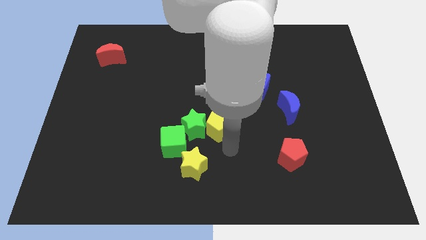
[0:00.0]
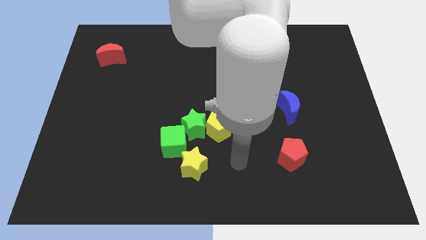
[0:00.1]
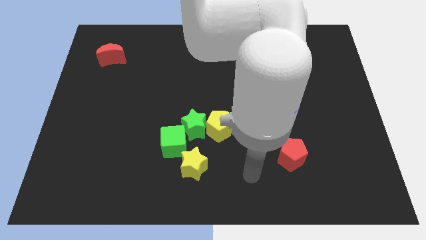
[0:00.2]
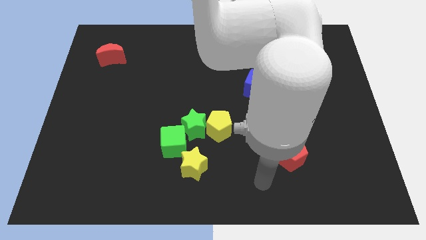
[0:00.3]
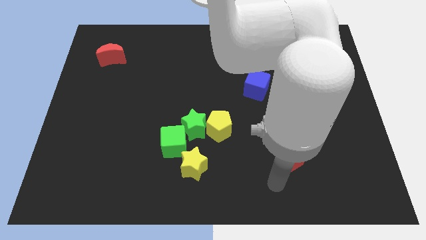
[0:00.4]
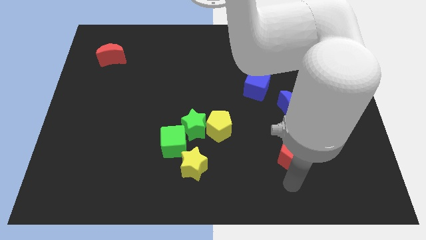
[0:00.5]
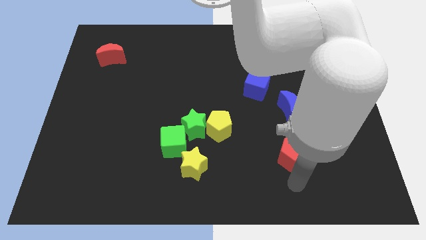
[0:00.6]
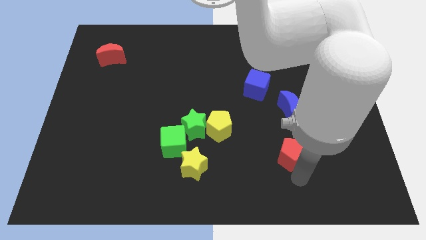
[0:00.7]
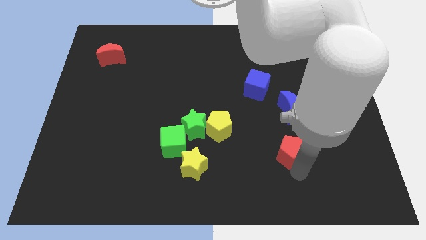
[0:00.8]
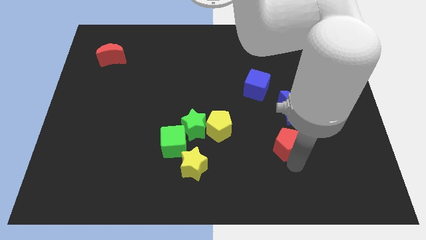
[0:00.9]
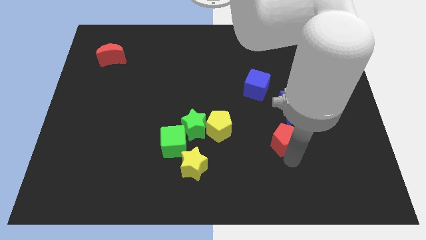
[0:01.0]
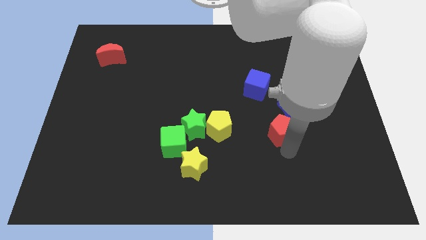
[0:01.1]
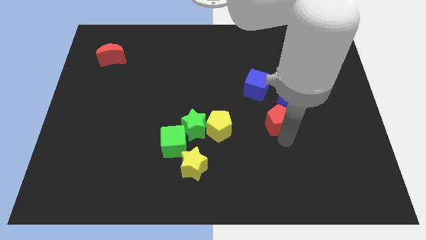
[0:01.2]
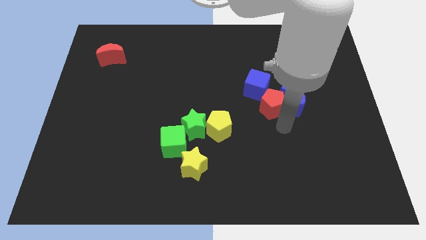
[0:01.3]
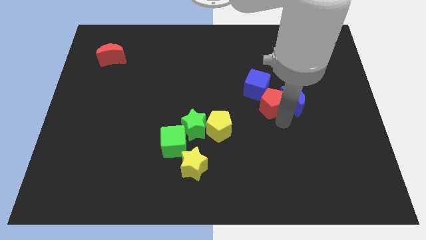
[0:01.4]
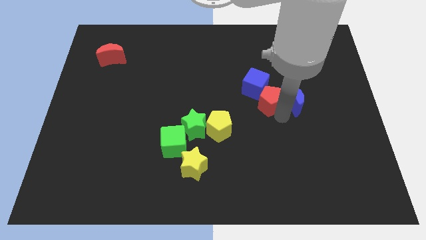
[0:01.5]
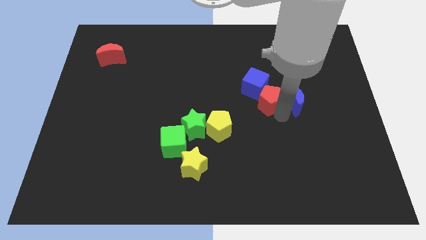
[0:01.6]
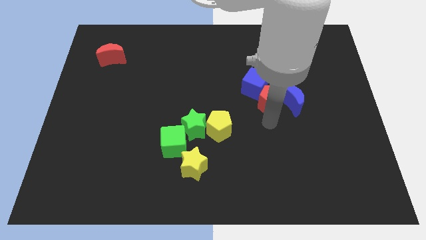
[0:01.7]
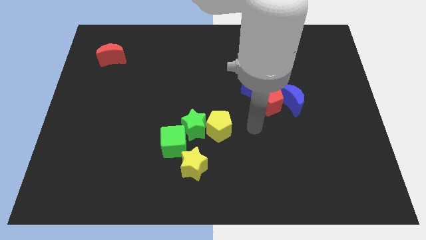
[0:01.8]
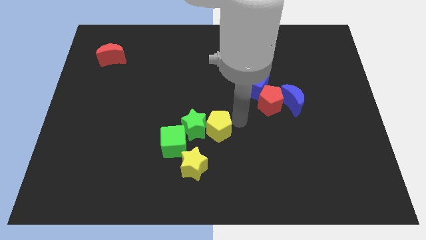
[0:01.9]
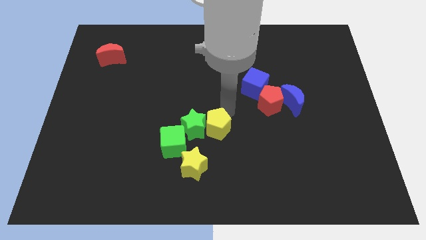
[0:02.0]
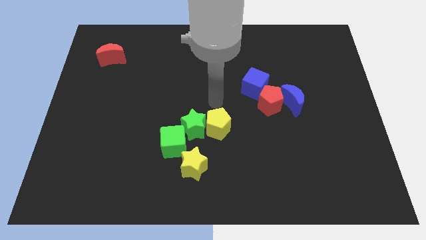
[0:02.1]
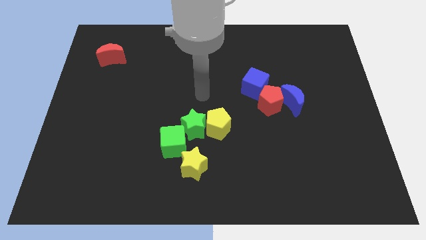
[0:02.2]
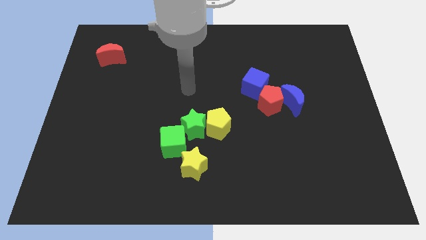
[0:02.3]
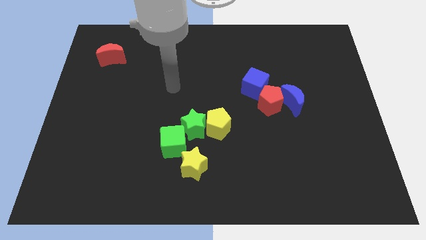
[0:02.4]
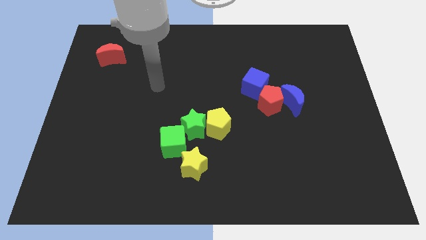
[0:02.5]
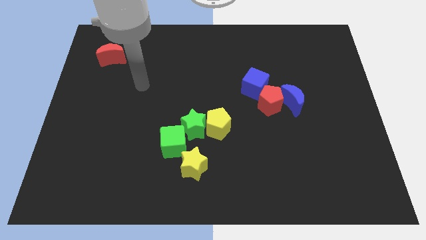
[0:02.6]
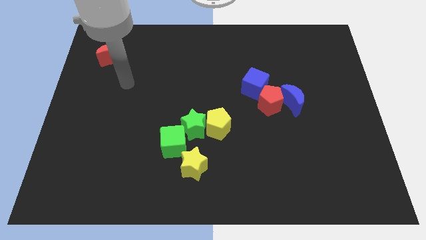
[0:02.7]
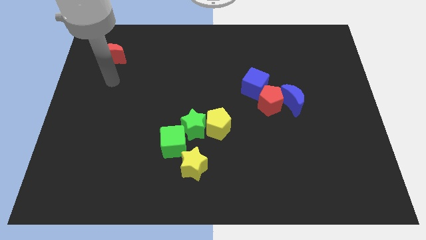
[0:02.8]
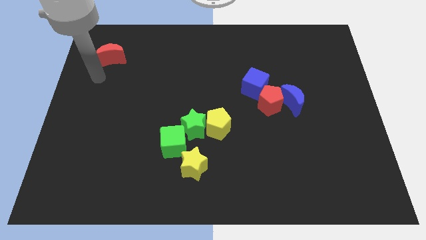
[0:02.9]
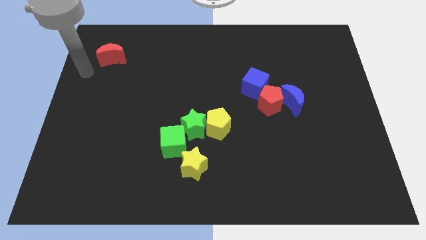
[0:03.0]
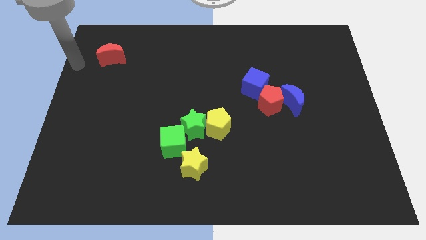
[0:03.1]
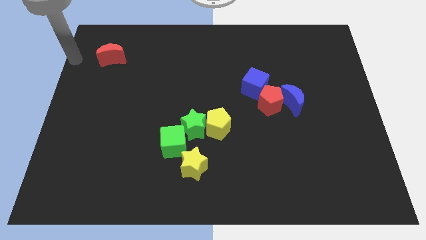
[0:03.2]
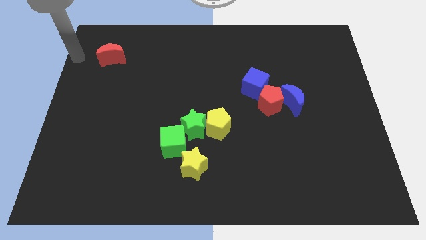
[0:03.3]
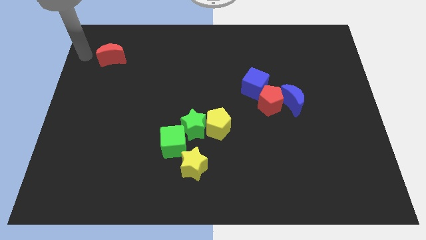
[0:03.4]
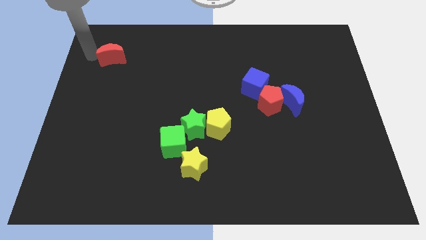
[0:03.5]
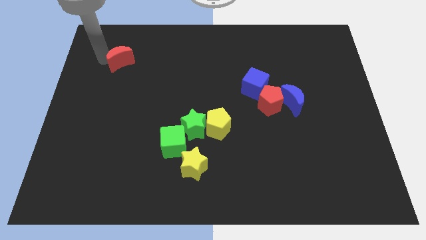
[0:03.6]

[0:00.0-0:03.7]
slide the red pentagon into the blue cube

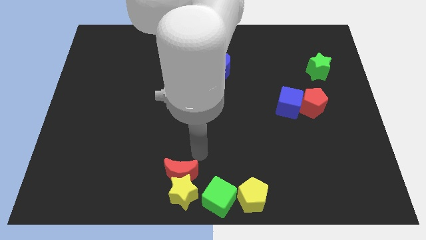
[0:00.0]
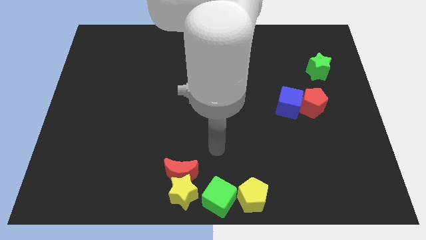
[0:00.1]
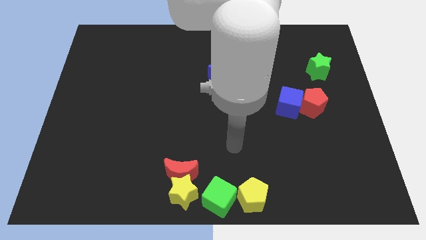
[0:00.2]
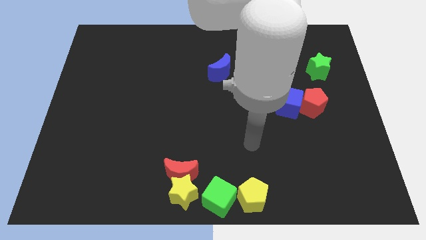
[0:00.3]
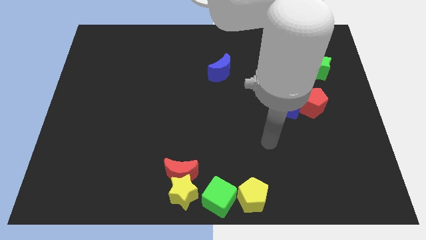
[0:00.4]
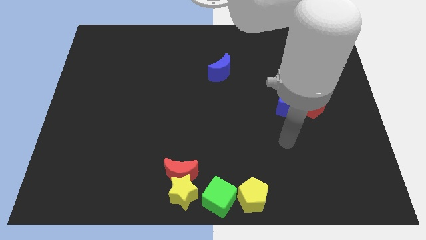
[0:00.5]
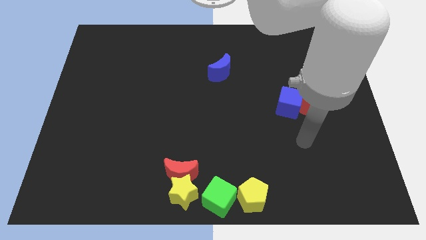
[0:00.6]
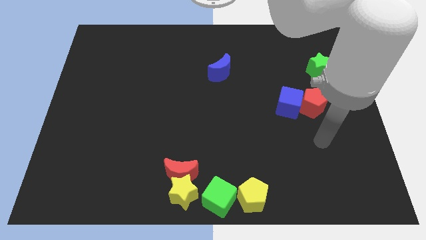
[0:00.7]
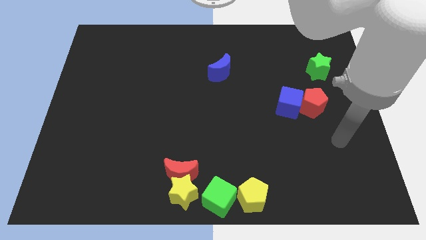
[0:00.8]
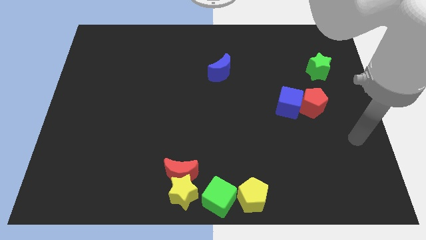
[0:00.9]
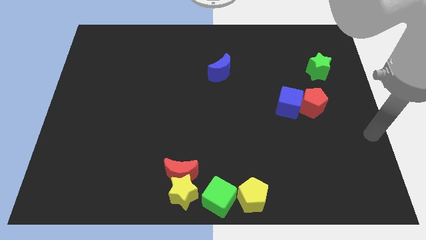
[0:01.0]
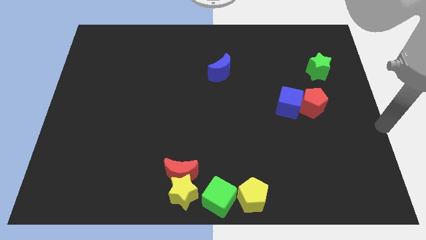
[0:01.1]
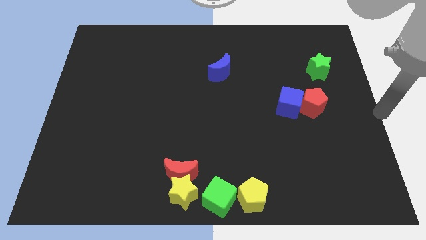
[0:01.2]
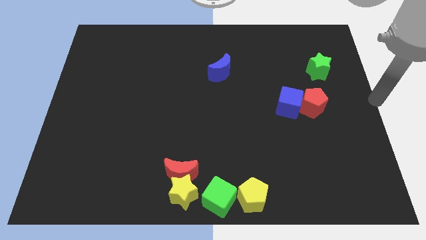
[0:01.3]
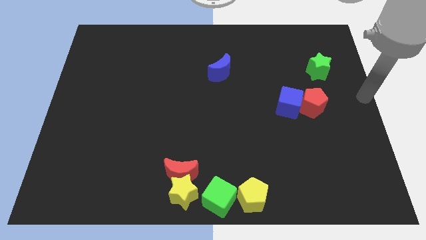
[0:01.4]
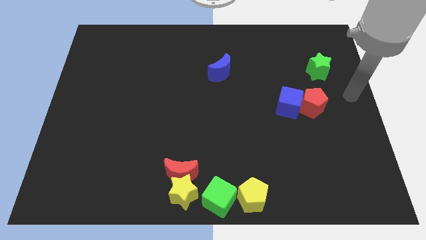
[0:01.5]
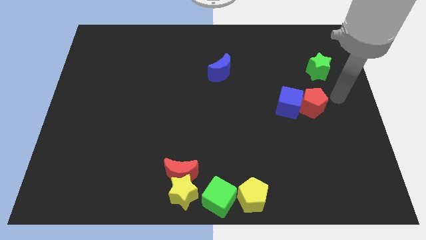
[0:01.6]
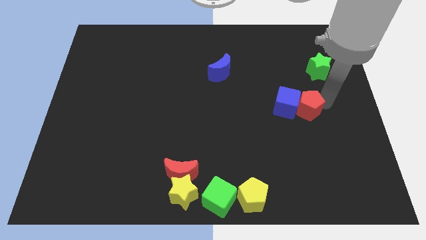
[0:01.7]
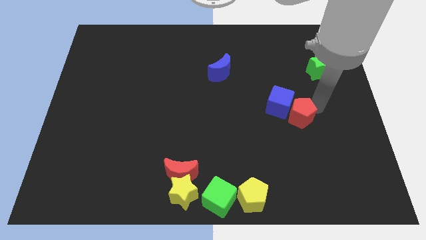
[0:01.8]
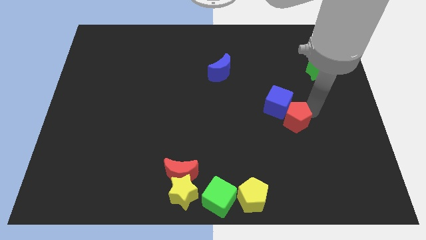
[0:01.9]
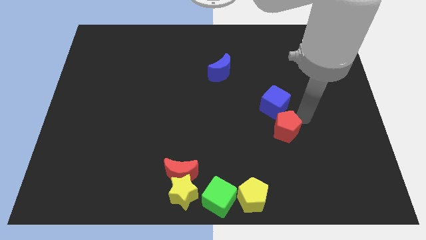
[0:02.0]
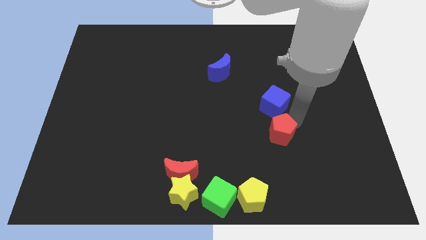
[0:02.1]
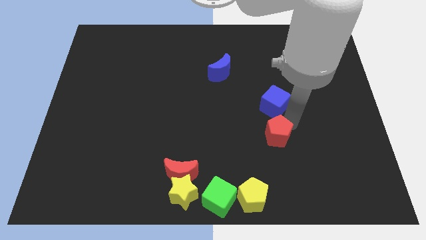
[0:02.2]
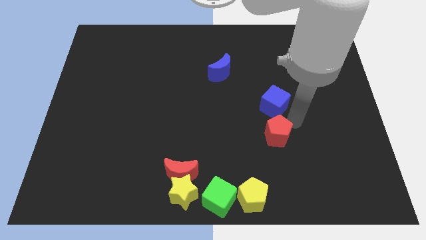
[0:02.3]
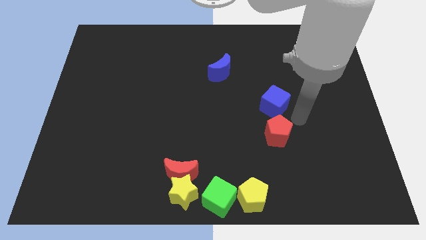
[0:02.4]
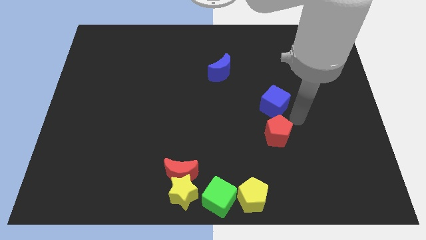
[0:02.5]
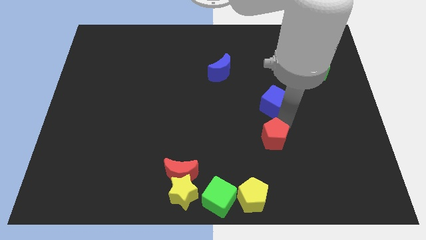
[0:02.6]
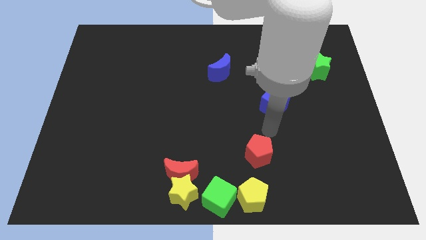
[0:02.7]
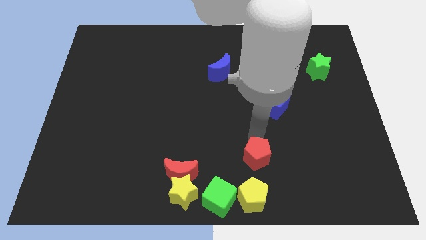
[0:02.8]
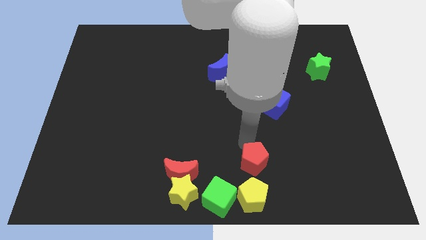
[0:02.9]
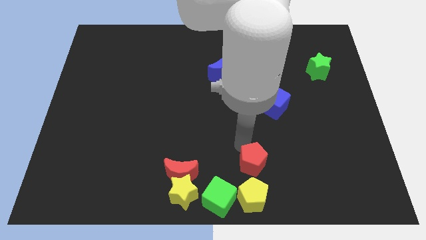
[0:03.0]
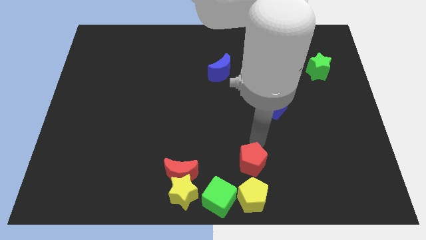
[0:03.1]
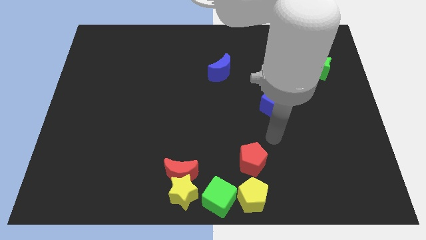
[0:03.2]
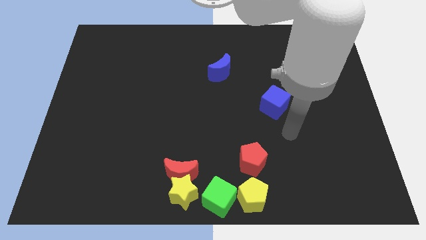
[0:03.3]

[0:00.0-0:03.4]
separate the red pentagon from blue cube

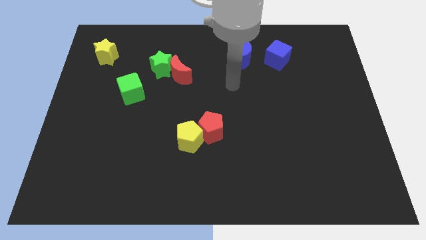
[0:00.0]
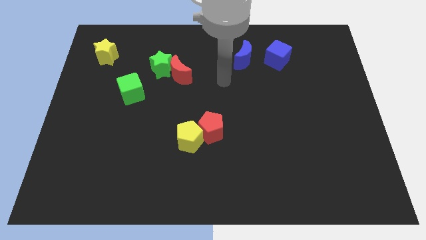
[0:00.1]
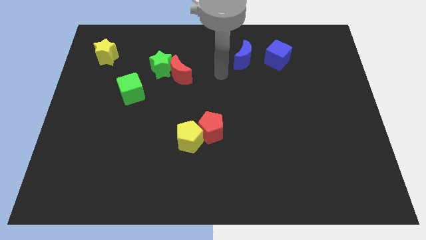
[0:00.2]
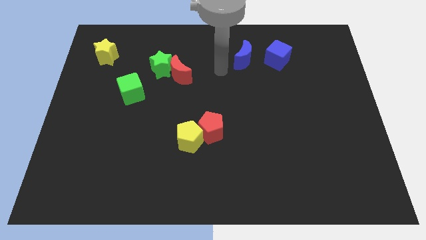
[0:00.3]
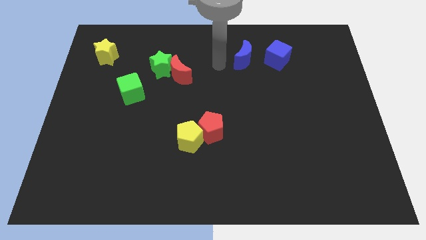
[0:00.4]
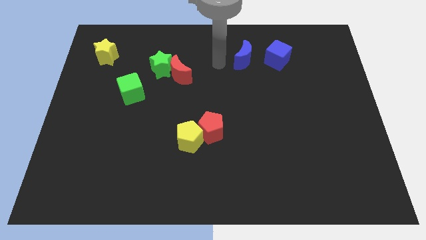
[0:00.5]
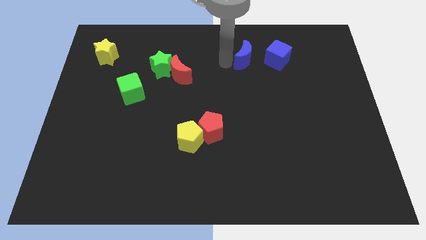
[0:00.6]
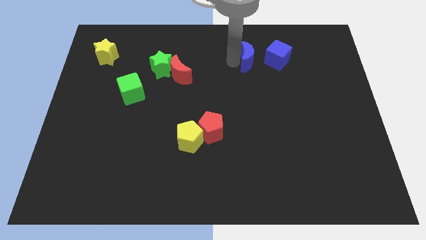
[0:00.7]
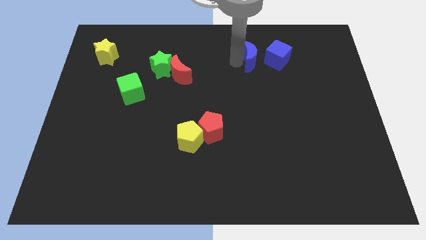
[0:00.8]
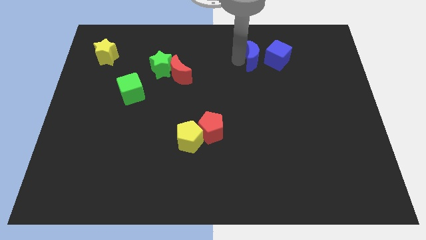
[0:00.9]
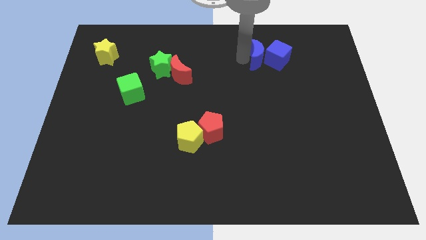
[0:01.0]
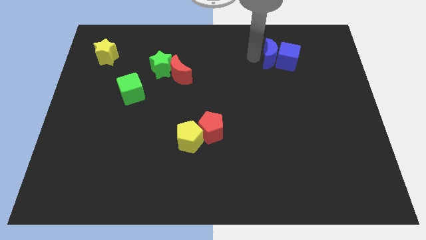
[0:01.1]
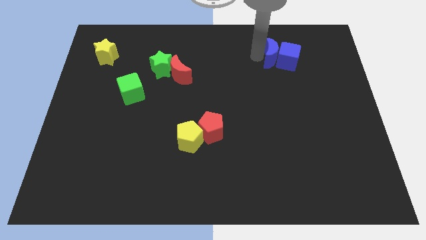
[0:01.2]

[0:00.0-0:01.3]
move the blue crescent and blue cube slightly right
